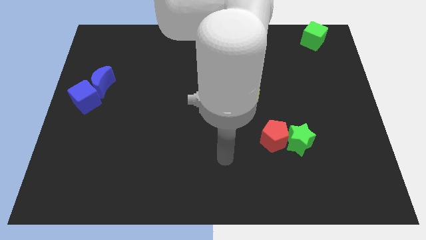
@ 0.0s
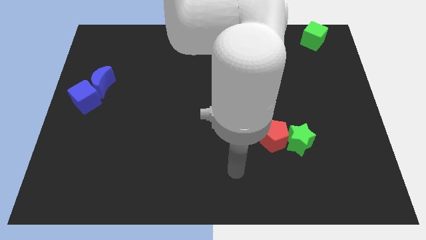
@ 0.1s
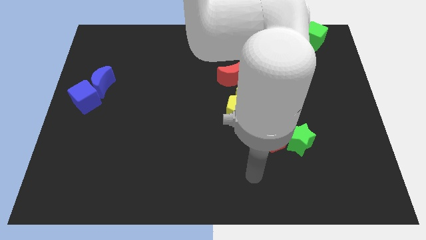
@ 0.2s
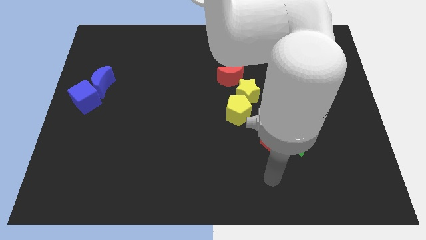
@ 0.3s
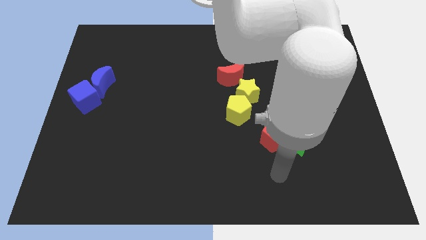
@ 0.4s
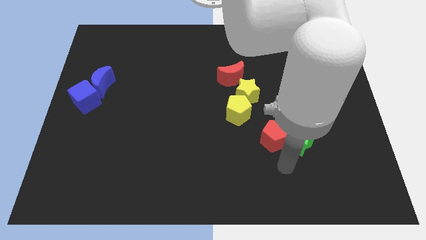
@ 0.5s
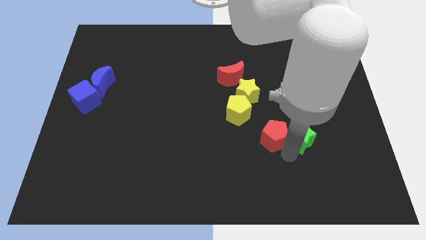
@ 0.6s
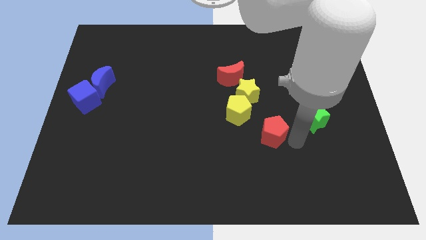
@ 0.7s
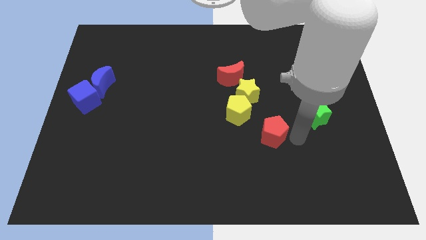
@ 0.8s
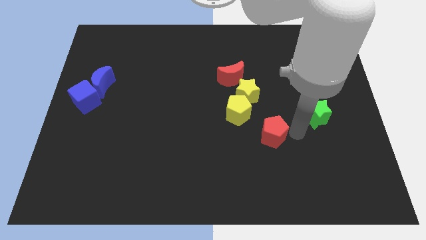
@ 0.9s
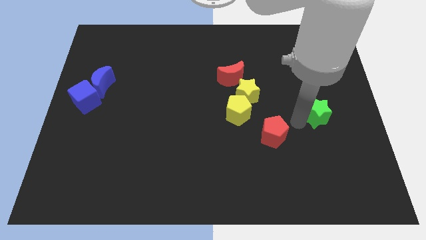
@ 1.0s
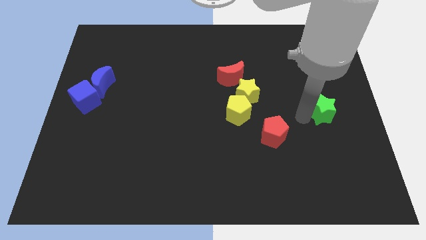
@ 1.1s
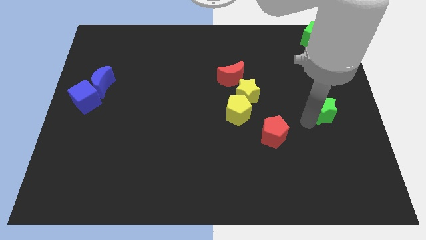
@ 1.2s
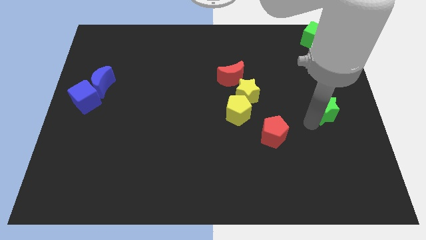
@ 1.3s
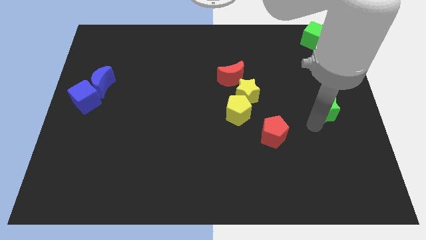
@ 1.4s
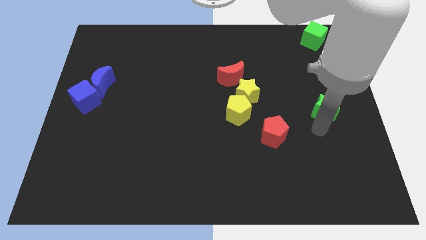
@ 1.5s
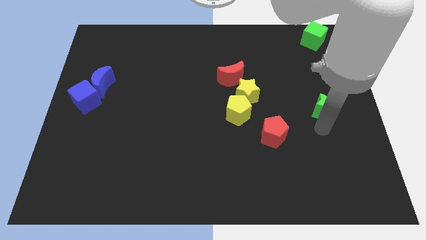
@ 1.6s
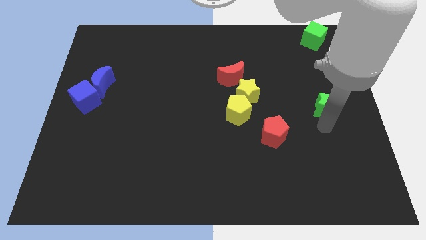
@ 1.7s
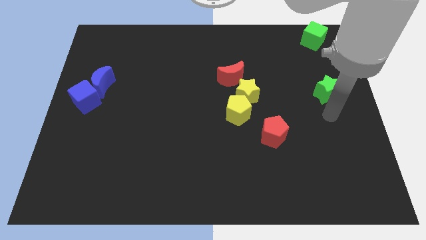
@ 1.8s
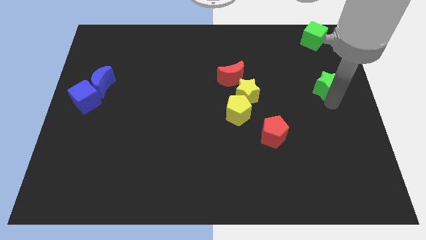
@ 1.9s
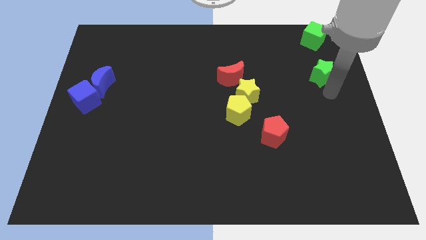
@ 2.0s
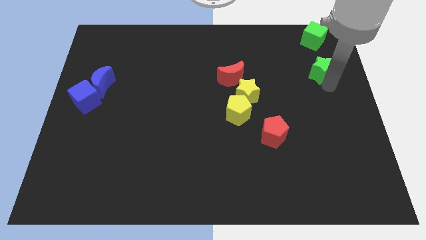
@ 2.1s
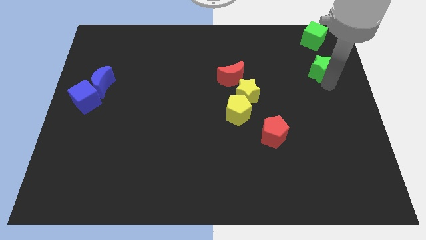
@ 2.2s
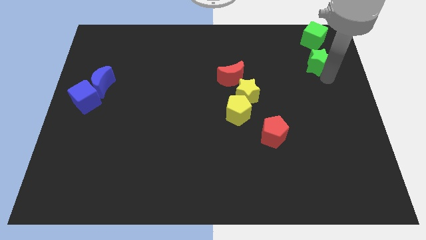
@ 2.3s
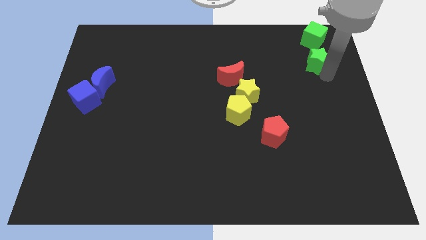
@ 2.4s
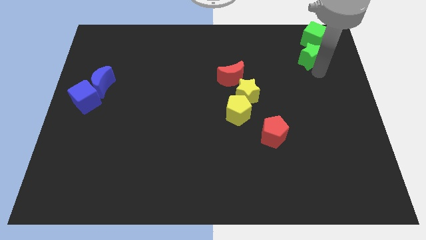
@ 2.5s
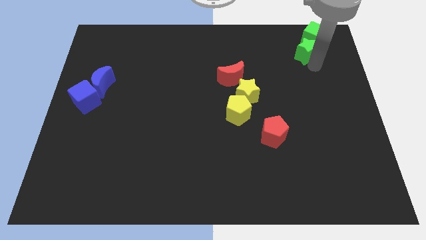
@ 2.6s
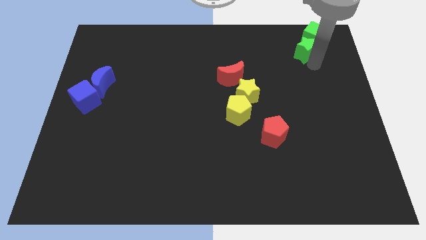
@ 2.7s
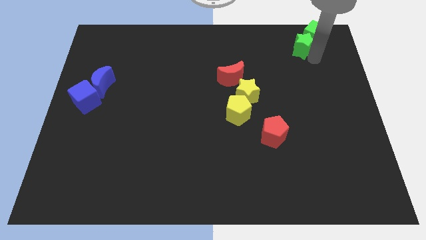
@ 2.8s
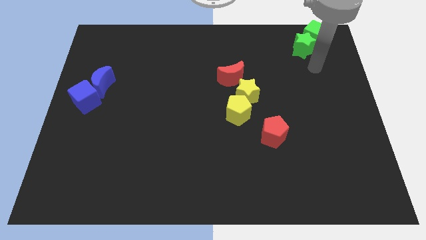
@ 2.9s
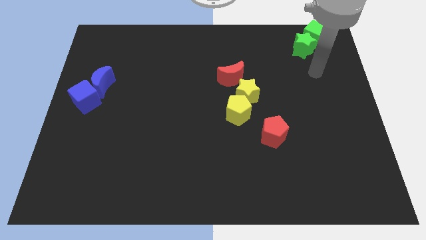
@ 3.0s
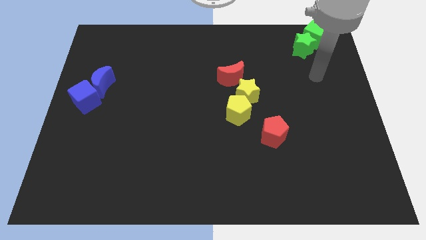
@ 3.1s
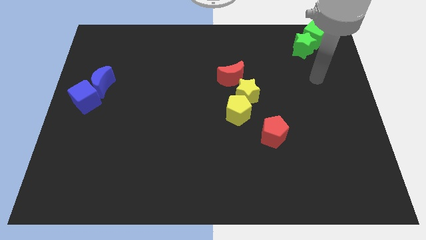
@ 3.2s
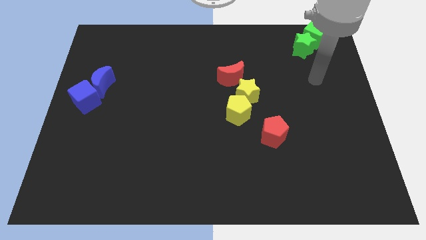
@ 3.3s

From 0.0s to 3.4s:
push the green star into the green cube

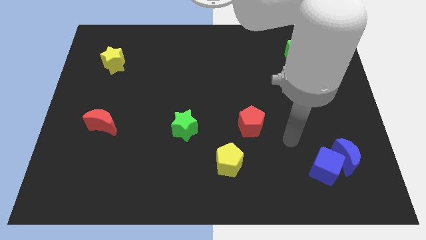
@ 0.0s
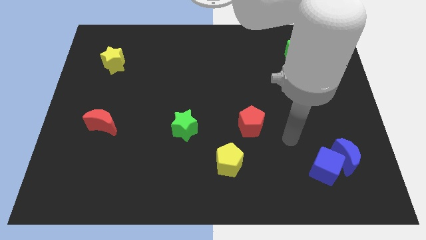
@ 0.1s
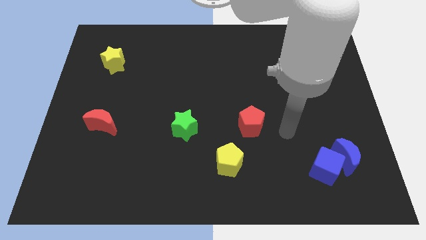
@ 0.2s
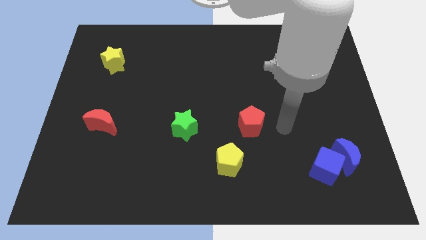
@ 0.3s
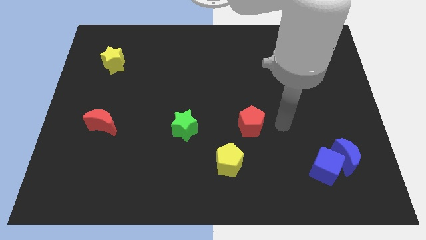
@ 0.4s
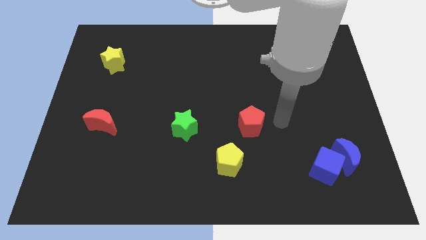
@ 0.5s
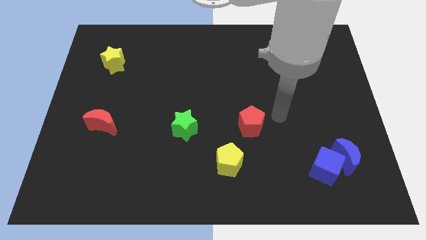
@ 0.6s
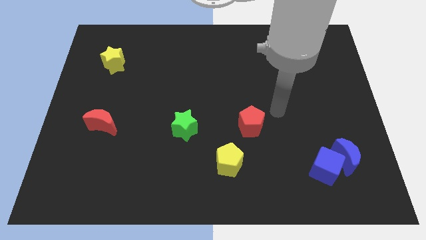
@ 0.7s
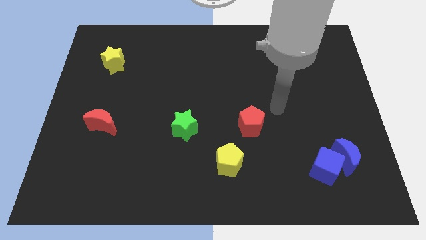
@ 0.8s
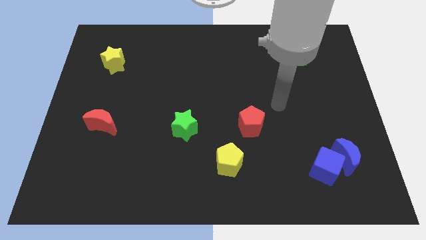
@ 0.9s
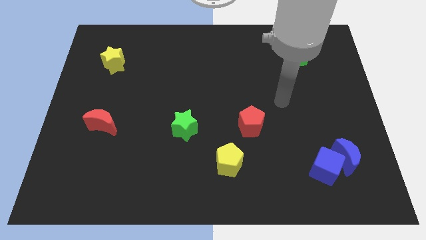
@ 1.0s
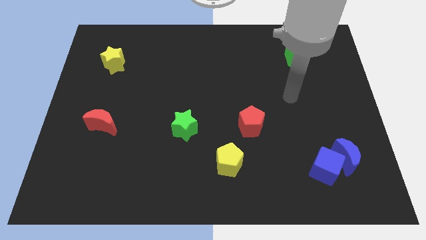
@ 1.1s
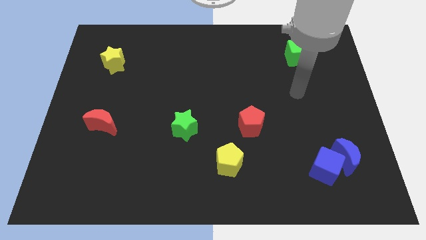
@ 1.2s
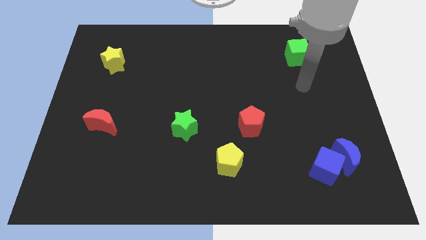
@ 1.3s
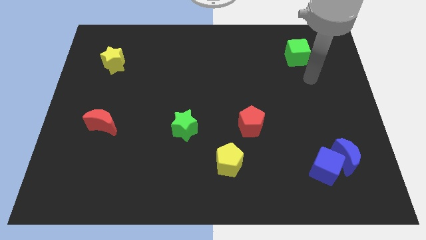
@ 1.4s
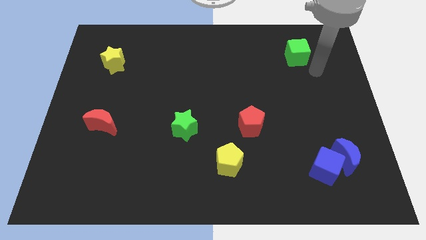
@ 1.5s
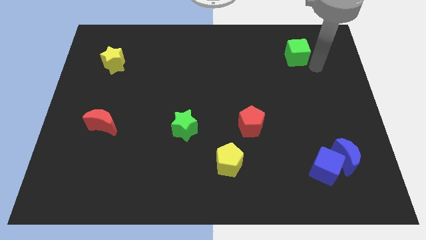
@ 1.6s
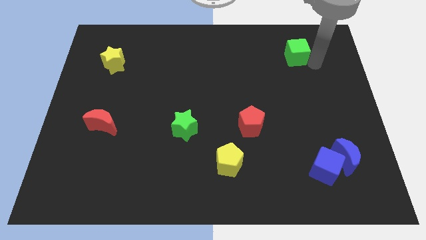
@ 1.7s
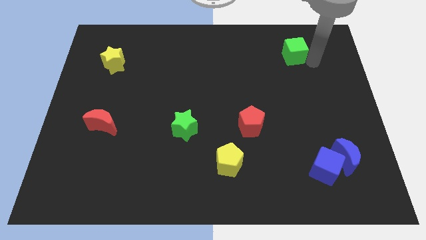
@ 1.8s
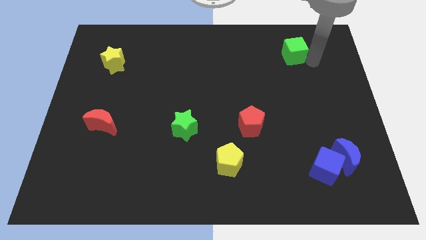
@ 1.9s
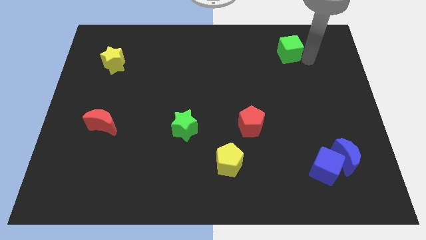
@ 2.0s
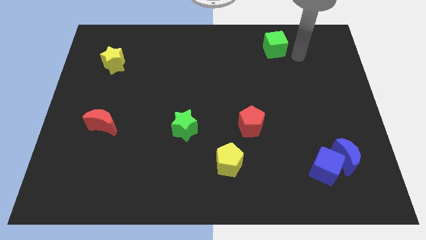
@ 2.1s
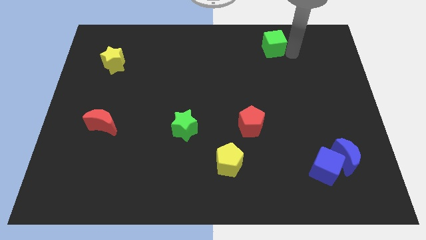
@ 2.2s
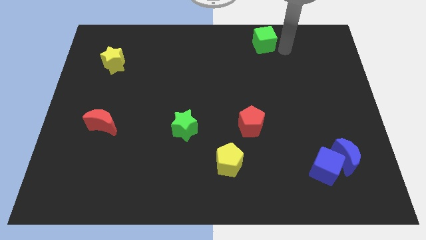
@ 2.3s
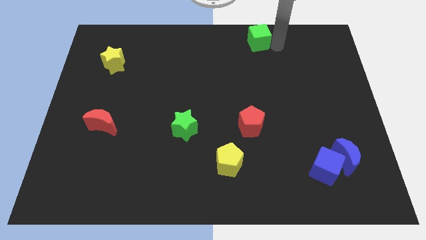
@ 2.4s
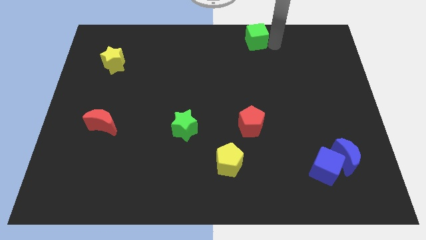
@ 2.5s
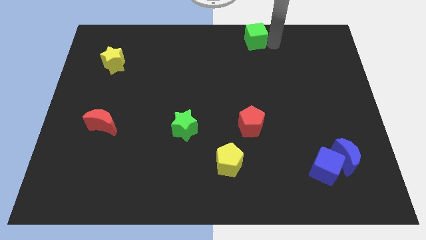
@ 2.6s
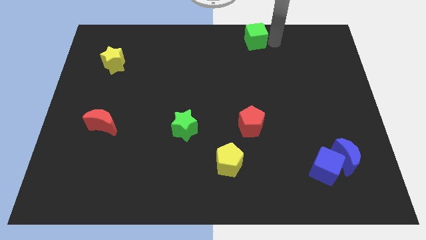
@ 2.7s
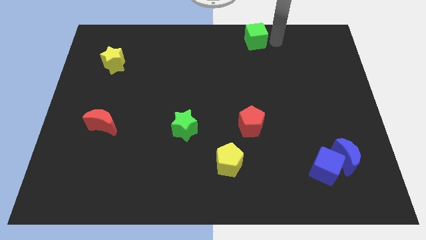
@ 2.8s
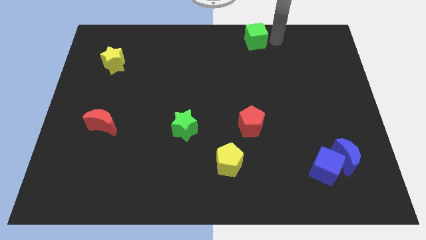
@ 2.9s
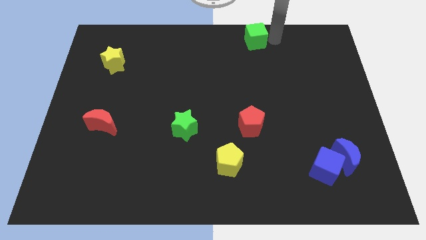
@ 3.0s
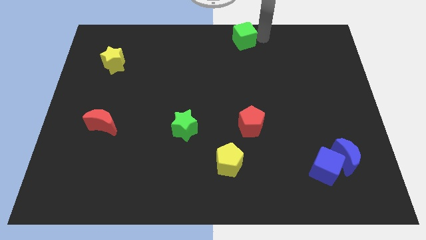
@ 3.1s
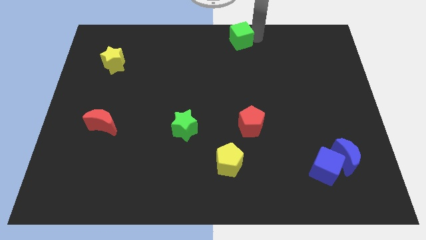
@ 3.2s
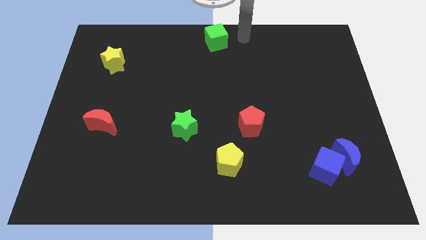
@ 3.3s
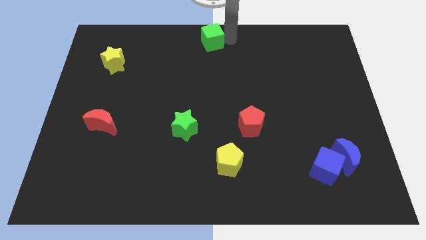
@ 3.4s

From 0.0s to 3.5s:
place the green cube at the top center of the board

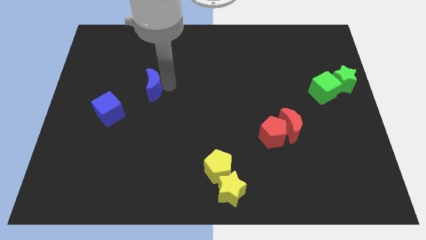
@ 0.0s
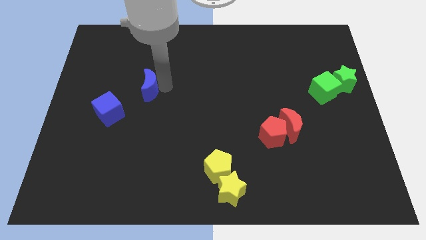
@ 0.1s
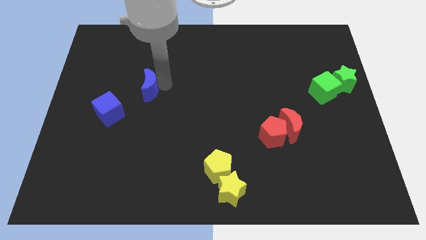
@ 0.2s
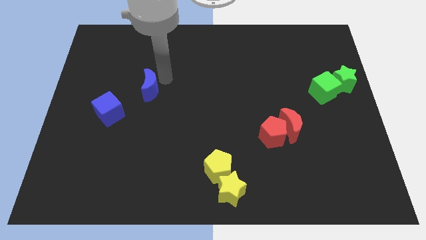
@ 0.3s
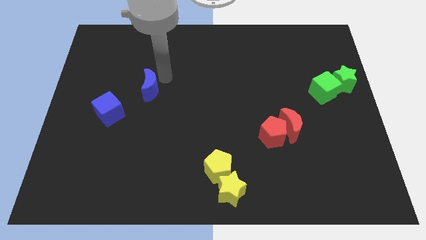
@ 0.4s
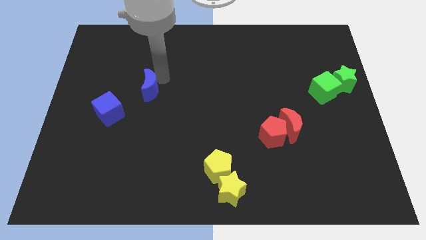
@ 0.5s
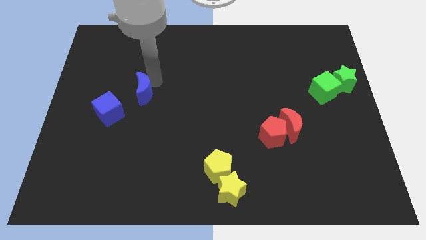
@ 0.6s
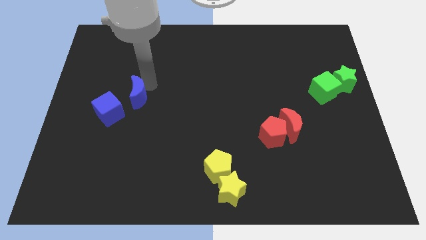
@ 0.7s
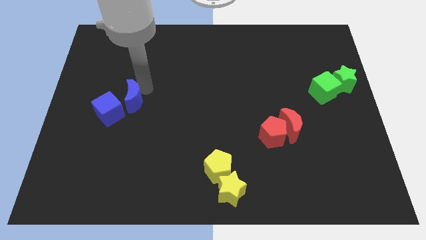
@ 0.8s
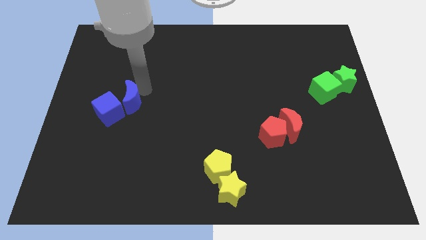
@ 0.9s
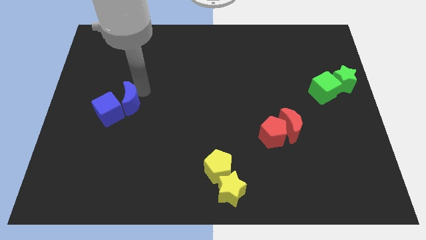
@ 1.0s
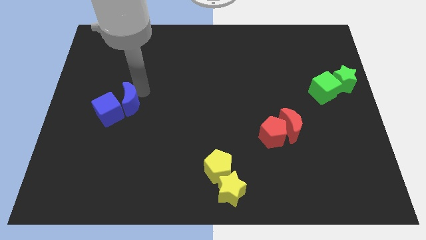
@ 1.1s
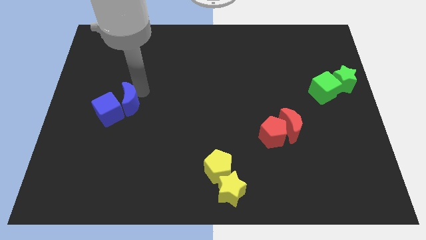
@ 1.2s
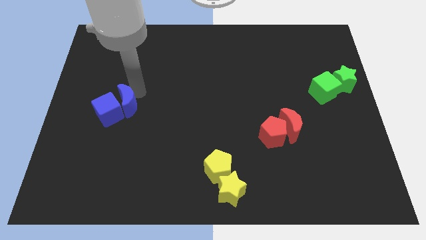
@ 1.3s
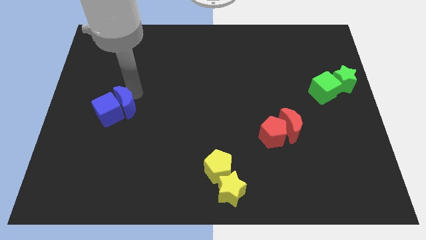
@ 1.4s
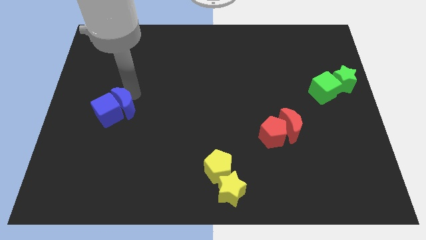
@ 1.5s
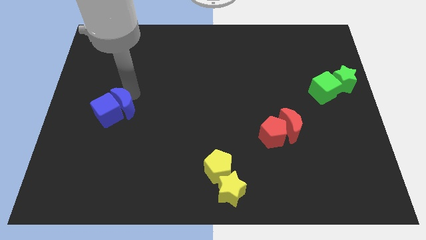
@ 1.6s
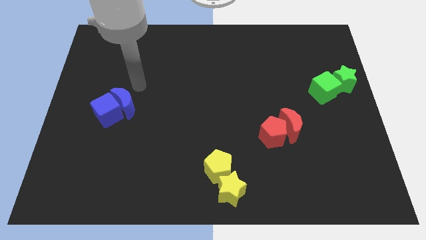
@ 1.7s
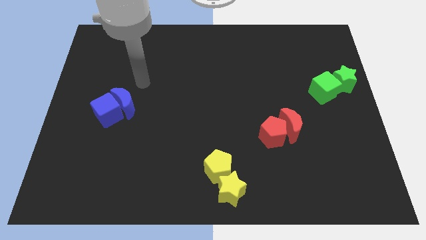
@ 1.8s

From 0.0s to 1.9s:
attach blue moon to the blue cube

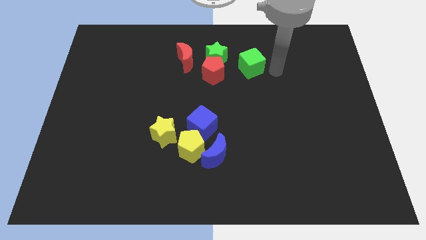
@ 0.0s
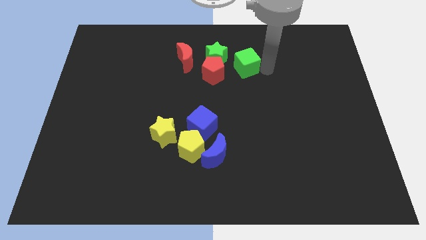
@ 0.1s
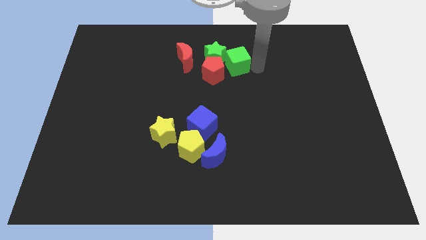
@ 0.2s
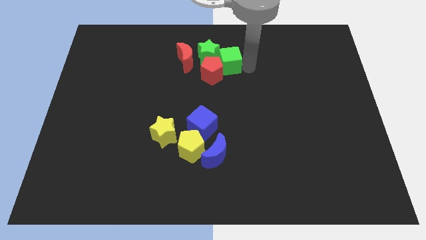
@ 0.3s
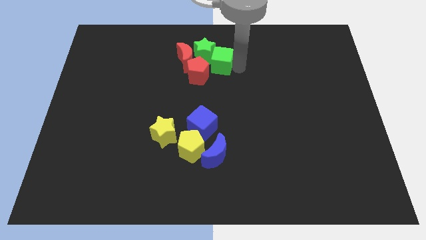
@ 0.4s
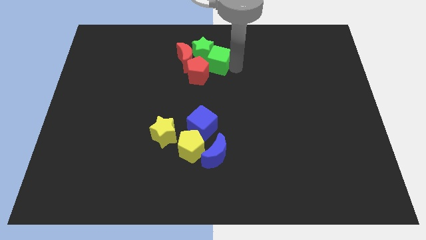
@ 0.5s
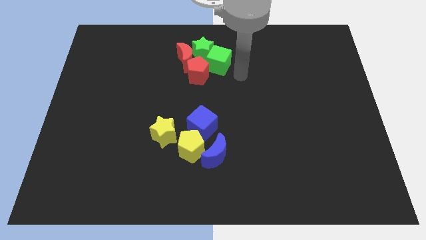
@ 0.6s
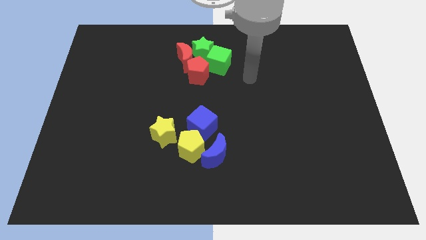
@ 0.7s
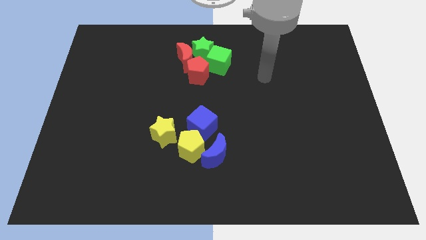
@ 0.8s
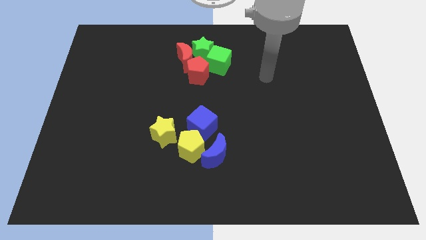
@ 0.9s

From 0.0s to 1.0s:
push green cube into green star
